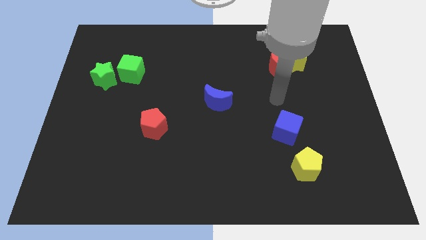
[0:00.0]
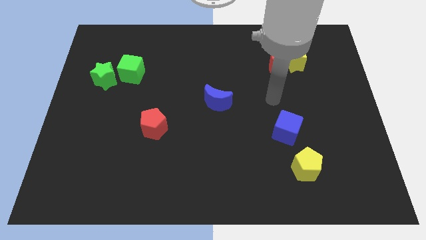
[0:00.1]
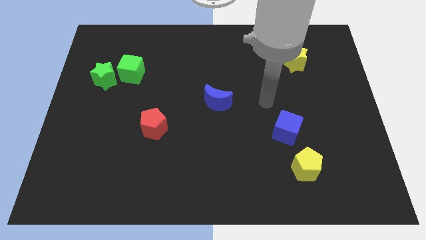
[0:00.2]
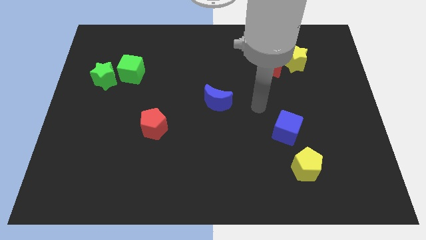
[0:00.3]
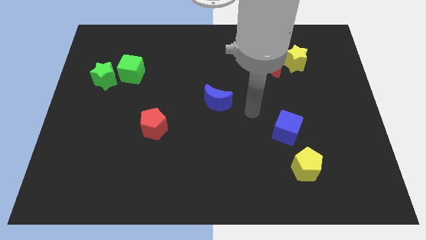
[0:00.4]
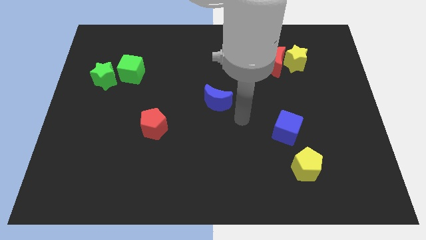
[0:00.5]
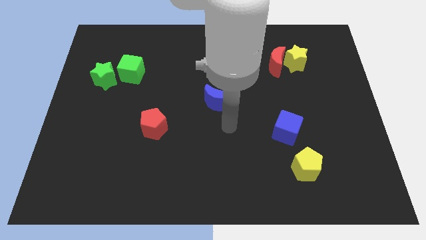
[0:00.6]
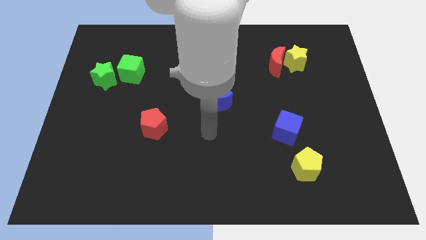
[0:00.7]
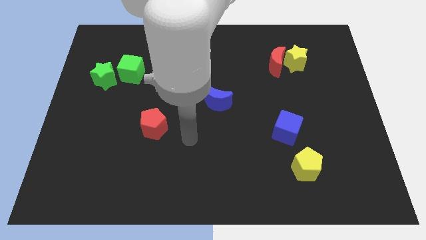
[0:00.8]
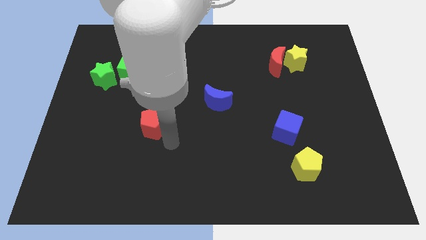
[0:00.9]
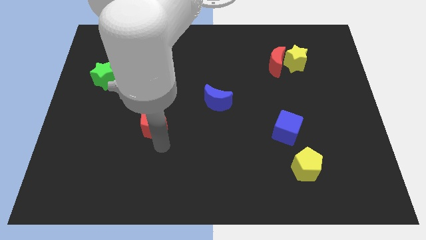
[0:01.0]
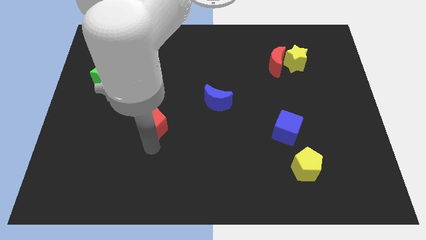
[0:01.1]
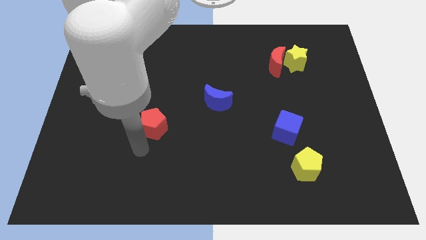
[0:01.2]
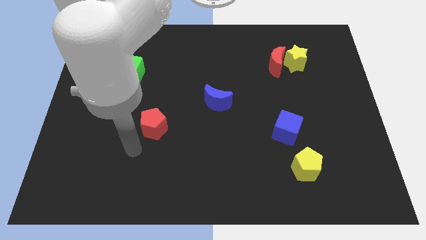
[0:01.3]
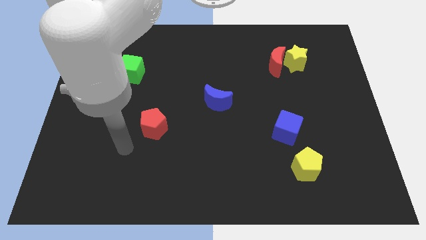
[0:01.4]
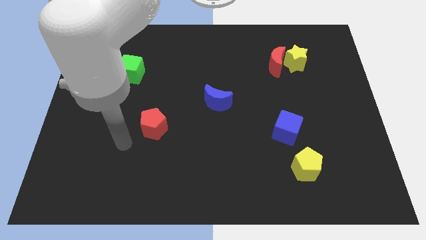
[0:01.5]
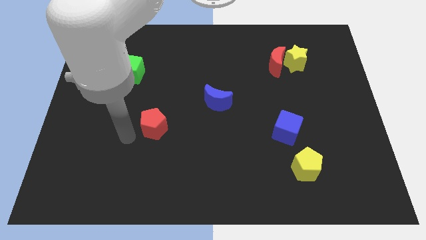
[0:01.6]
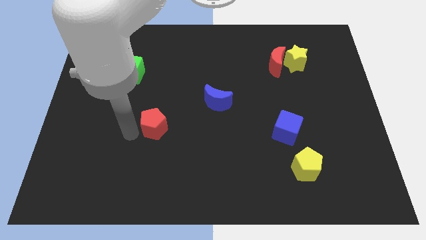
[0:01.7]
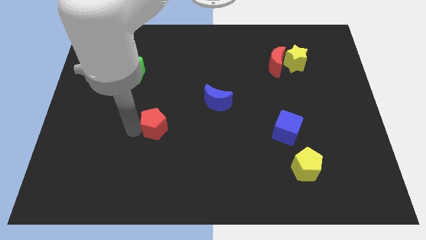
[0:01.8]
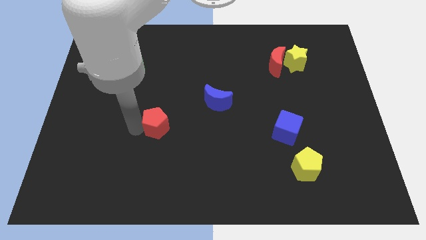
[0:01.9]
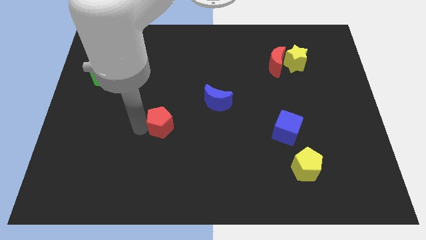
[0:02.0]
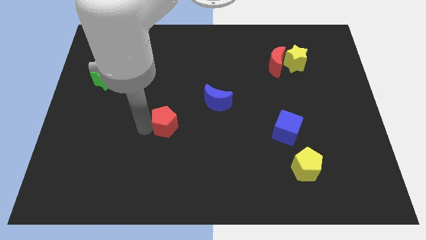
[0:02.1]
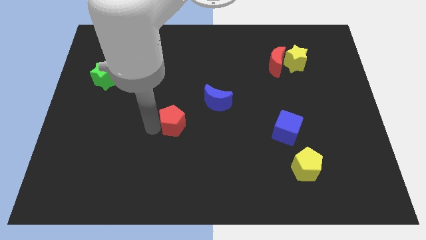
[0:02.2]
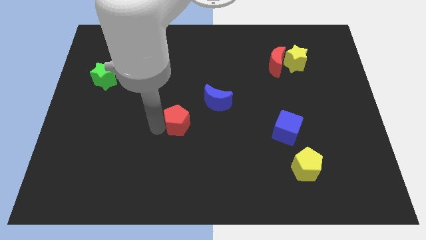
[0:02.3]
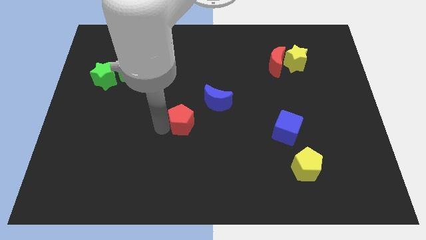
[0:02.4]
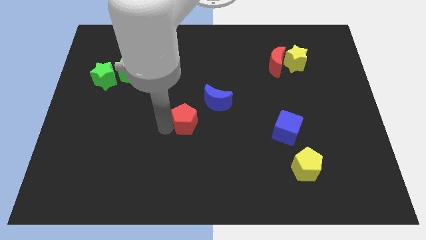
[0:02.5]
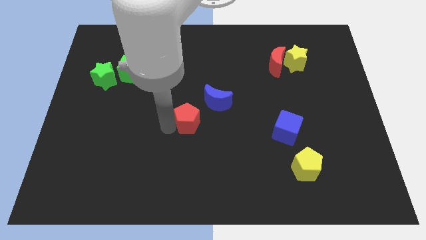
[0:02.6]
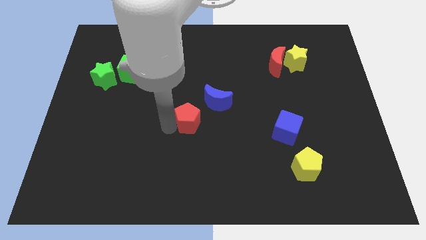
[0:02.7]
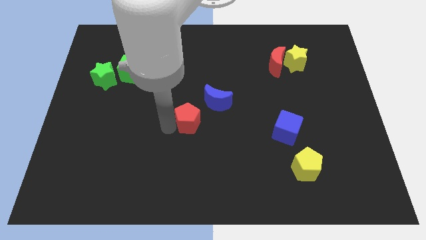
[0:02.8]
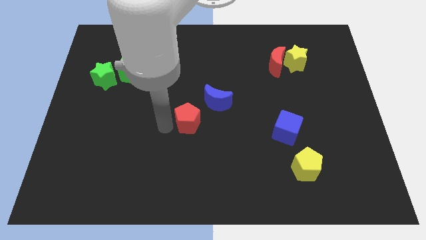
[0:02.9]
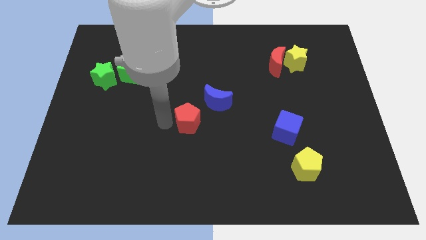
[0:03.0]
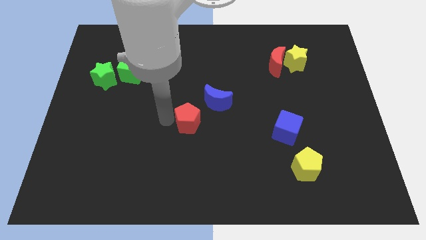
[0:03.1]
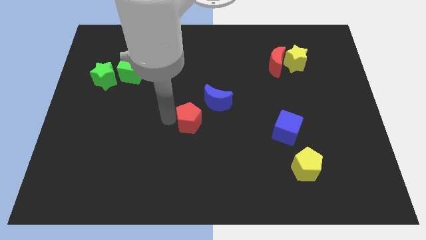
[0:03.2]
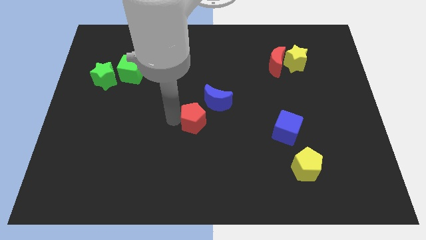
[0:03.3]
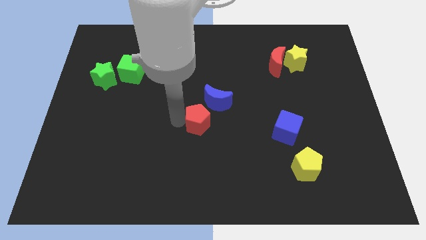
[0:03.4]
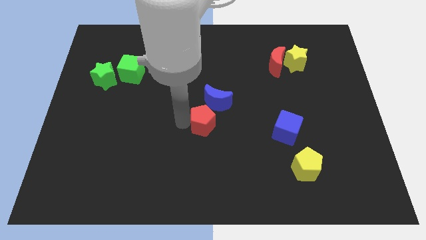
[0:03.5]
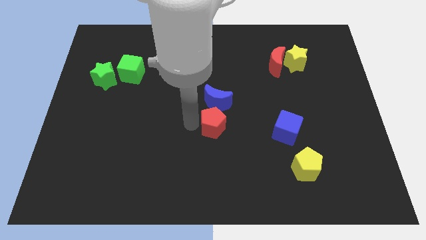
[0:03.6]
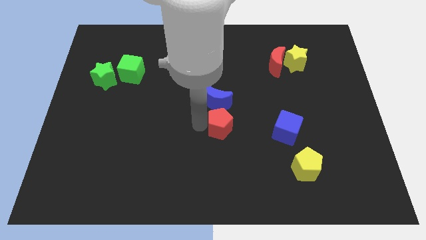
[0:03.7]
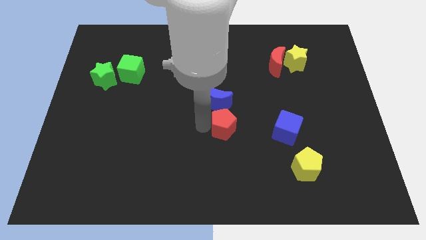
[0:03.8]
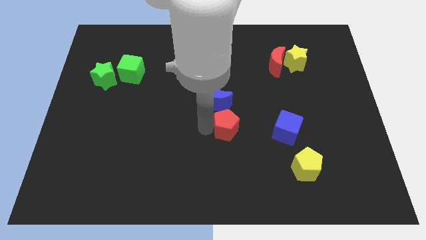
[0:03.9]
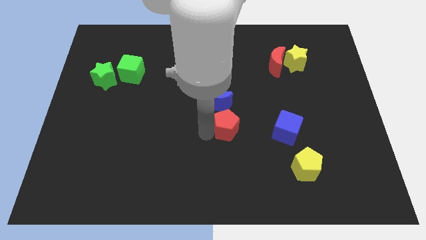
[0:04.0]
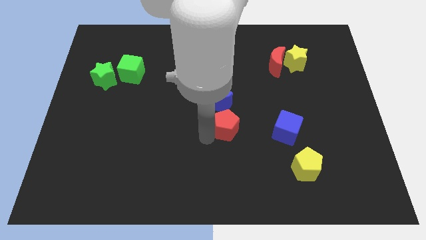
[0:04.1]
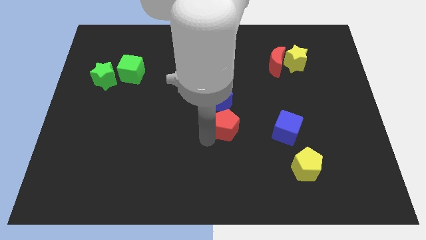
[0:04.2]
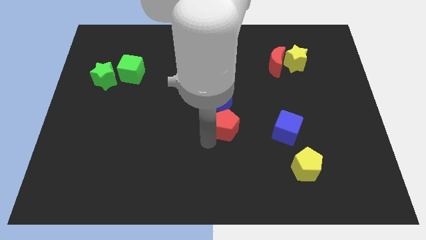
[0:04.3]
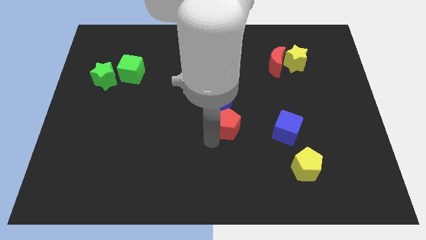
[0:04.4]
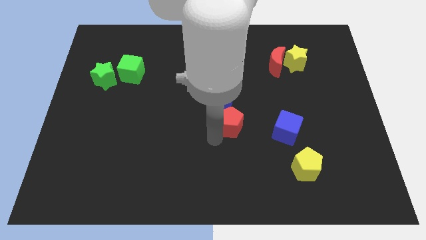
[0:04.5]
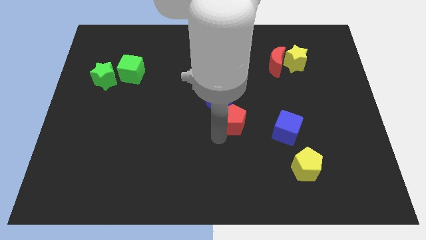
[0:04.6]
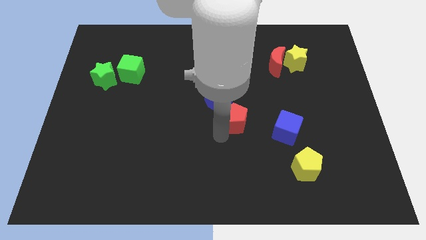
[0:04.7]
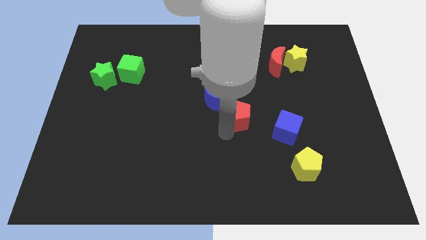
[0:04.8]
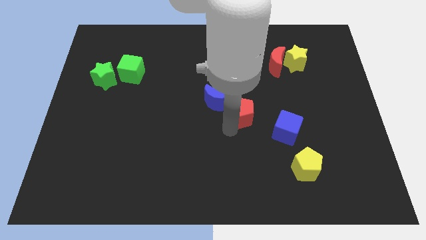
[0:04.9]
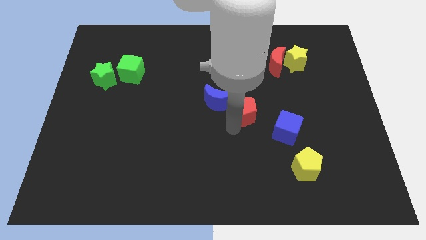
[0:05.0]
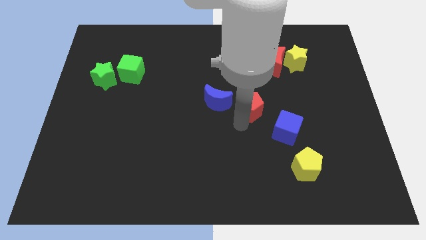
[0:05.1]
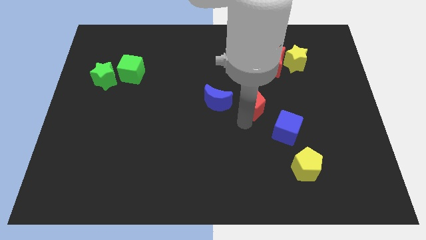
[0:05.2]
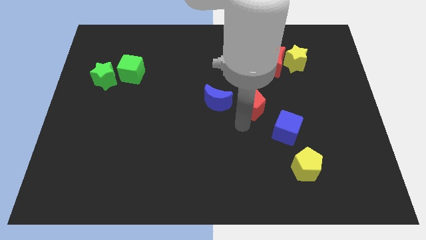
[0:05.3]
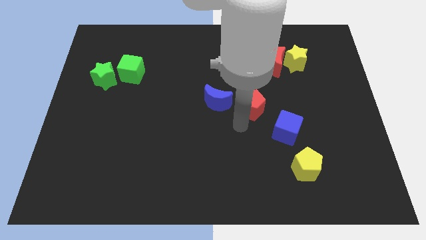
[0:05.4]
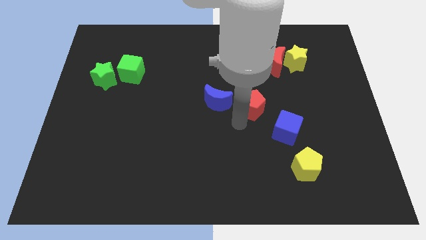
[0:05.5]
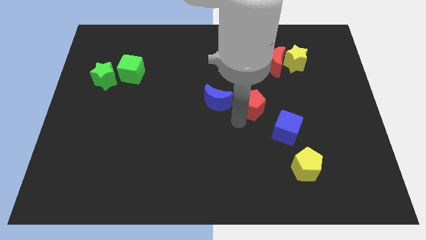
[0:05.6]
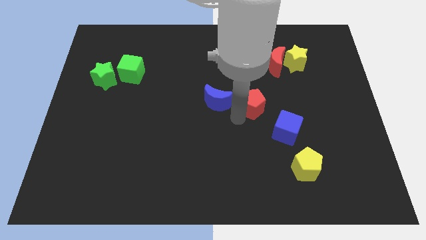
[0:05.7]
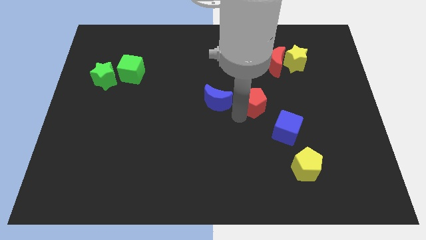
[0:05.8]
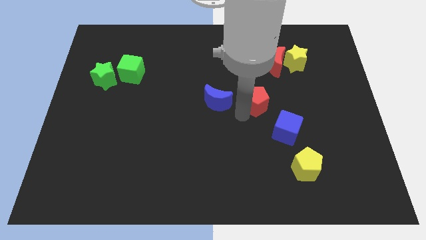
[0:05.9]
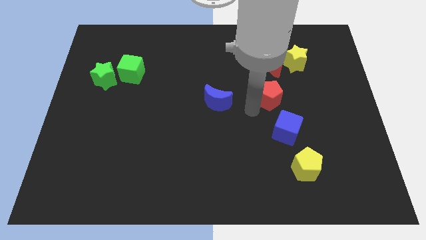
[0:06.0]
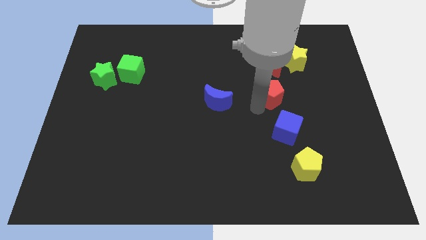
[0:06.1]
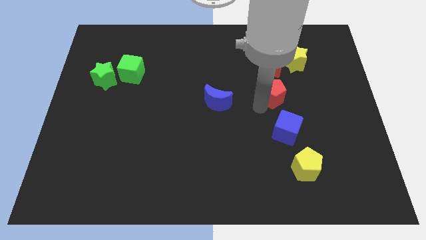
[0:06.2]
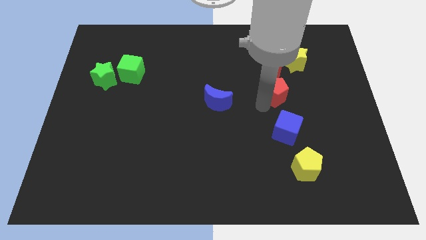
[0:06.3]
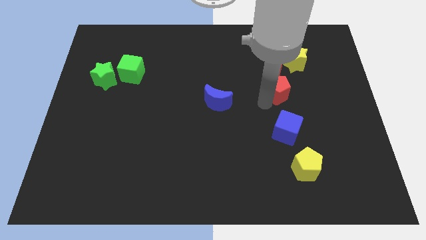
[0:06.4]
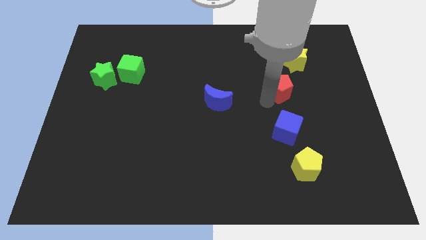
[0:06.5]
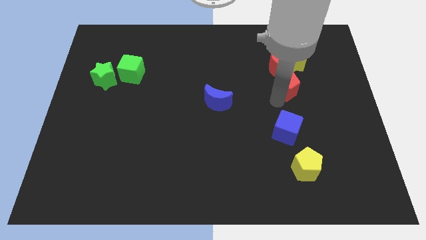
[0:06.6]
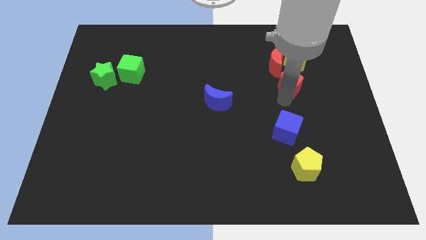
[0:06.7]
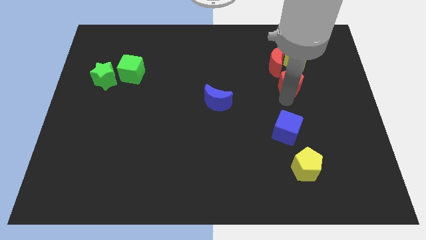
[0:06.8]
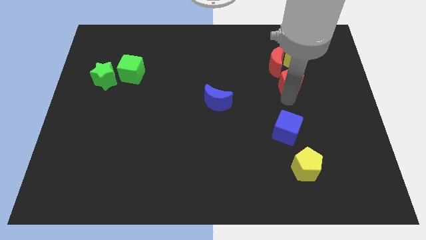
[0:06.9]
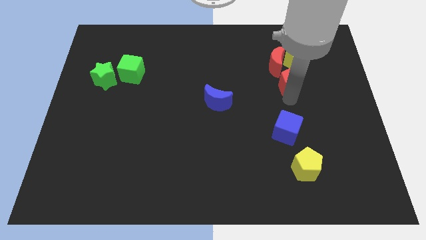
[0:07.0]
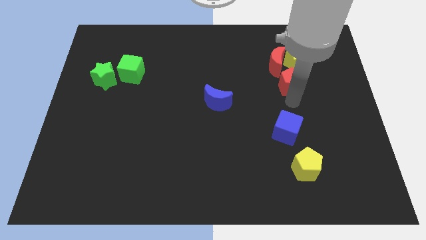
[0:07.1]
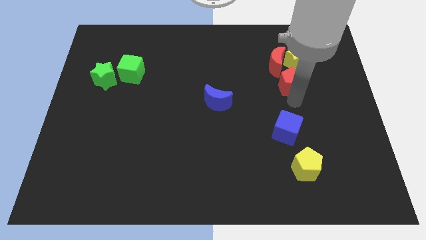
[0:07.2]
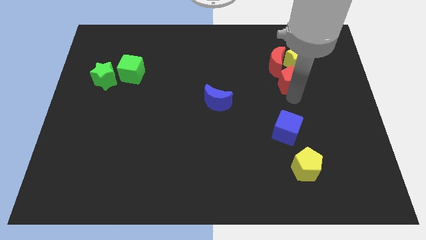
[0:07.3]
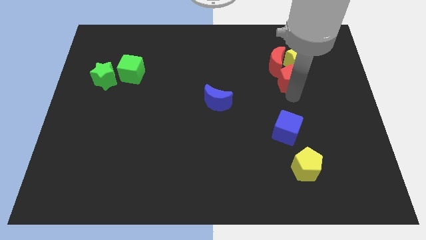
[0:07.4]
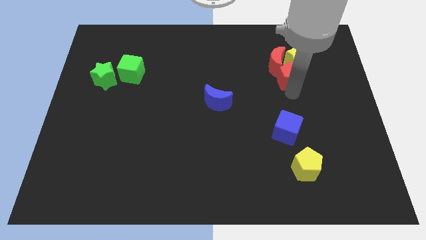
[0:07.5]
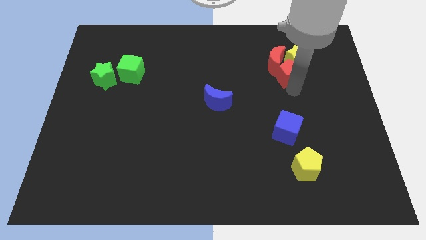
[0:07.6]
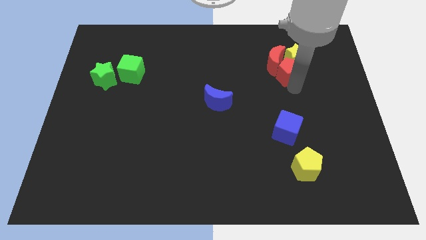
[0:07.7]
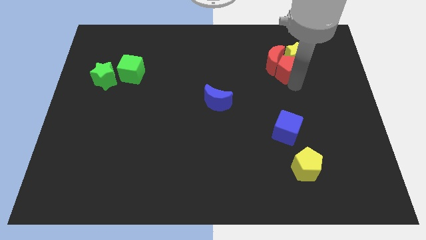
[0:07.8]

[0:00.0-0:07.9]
slide the red pentagon to the yellow star

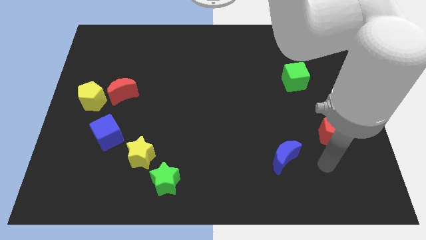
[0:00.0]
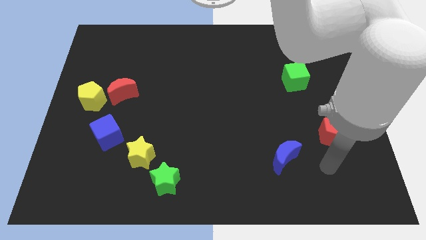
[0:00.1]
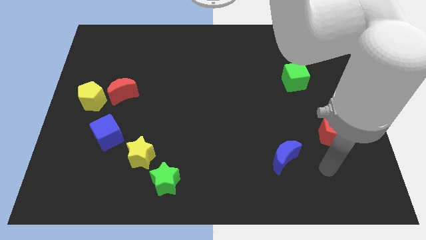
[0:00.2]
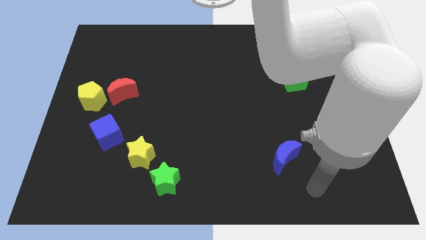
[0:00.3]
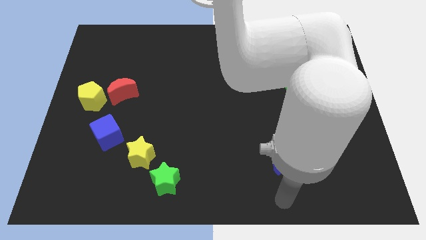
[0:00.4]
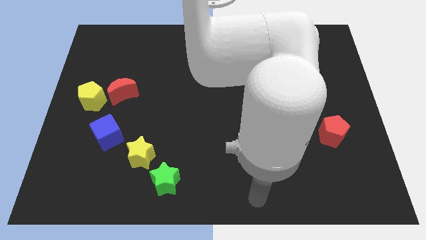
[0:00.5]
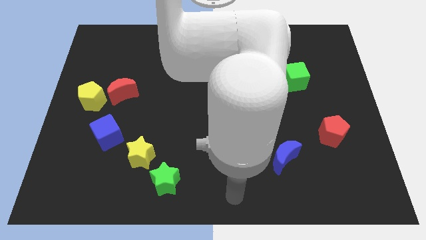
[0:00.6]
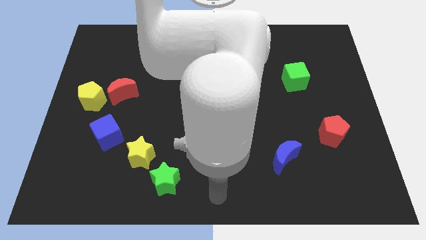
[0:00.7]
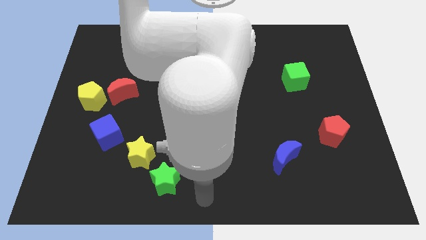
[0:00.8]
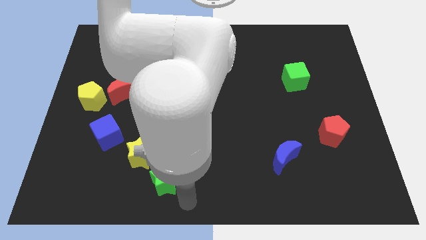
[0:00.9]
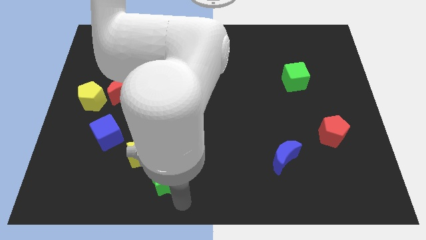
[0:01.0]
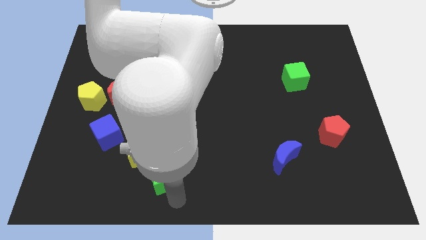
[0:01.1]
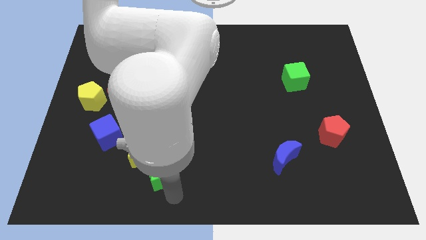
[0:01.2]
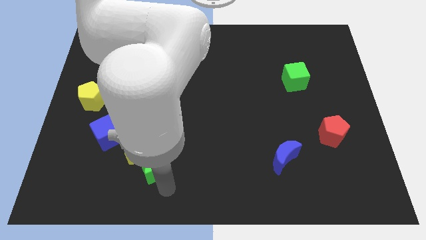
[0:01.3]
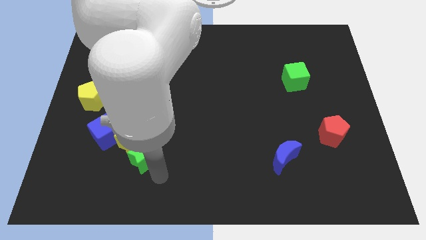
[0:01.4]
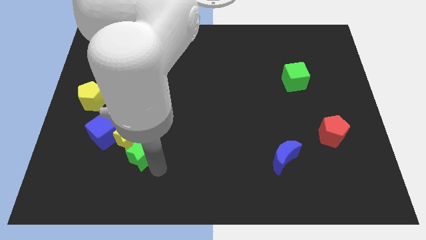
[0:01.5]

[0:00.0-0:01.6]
push the green star to the yellow star
